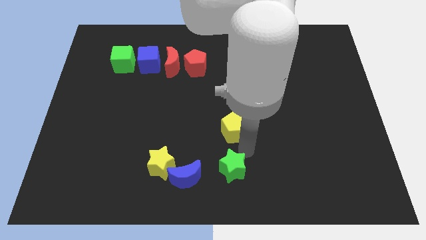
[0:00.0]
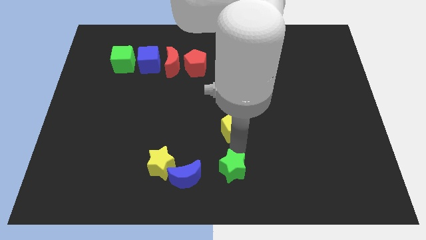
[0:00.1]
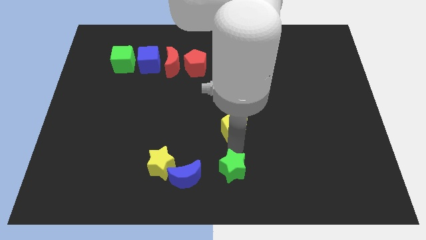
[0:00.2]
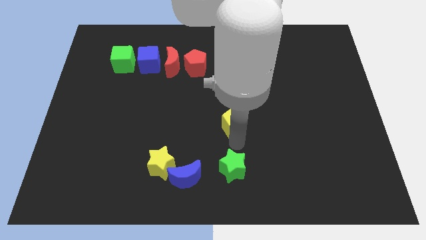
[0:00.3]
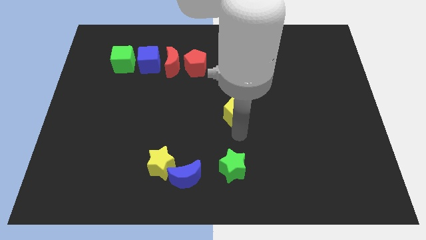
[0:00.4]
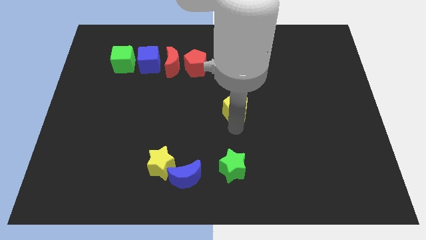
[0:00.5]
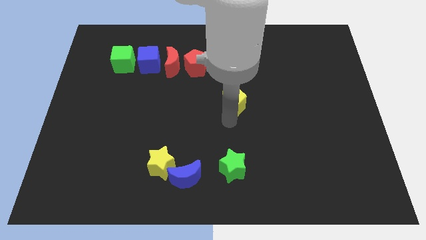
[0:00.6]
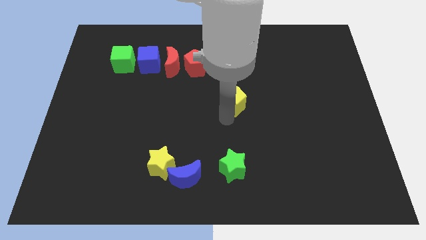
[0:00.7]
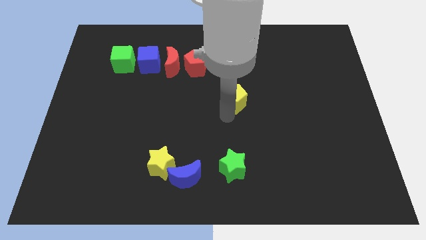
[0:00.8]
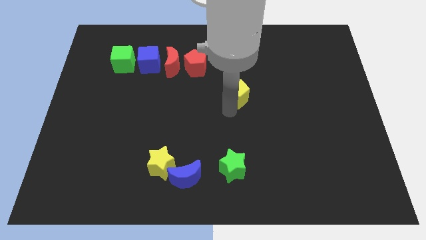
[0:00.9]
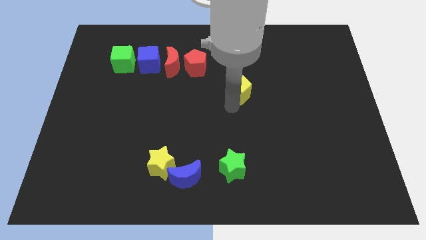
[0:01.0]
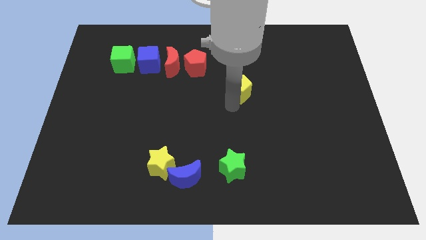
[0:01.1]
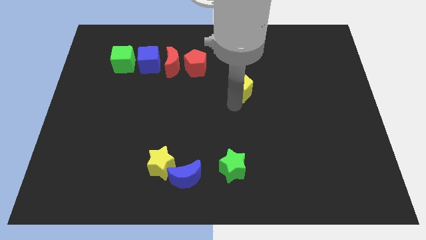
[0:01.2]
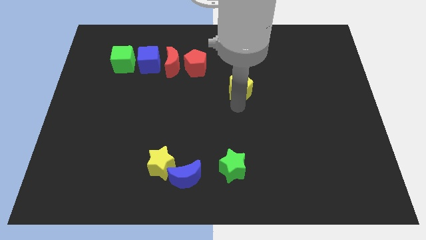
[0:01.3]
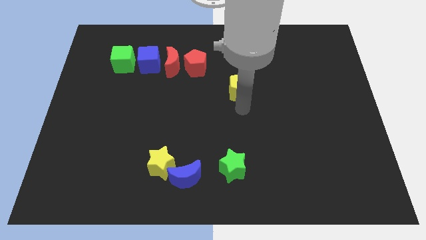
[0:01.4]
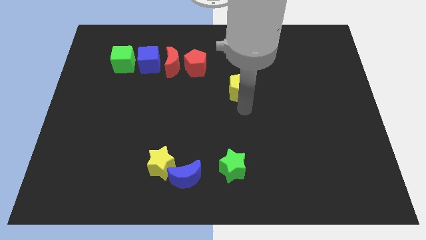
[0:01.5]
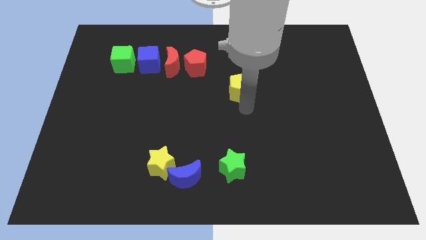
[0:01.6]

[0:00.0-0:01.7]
place yellow pentagon to the bottom right of red pentagon

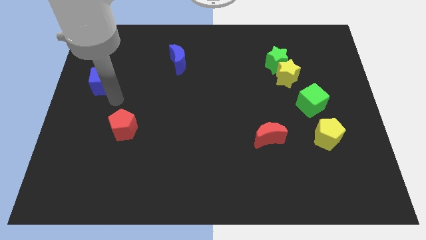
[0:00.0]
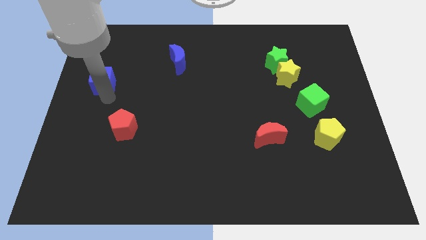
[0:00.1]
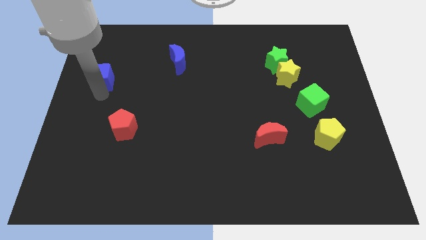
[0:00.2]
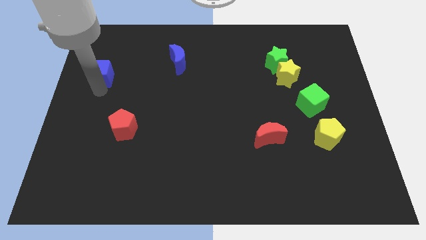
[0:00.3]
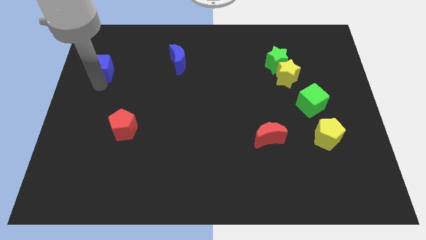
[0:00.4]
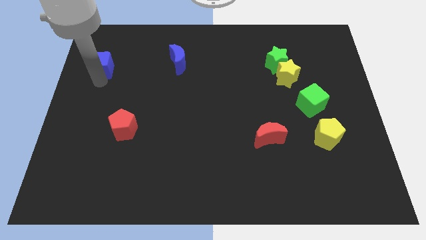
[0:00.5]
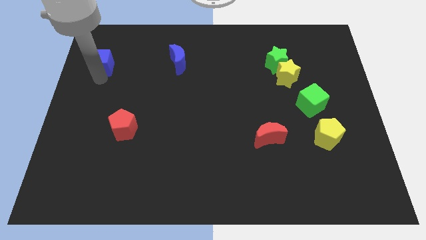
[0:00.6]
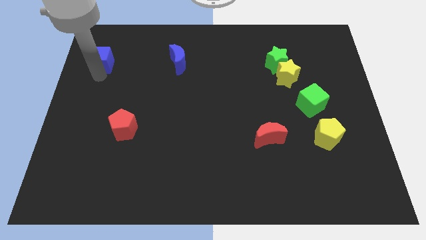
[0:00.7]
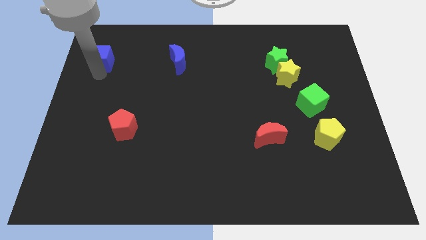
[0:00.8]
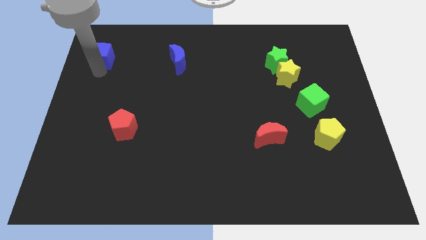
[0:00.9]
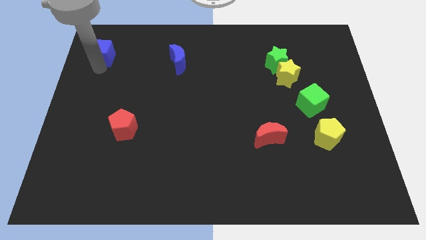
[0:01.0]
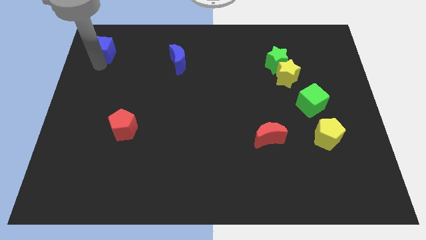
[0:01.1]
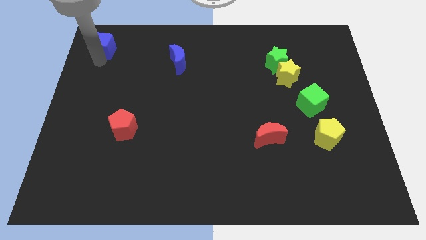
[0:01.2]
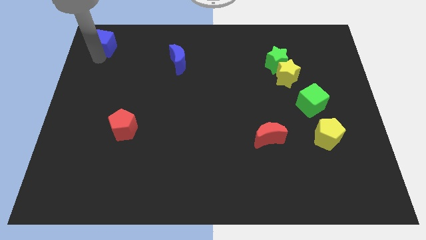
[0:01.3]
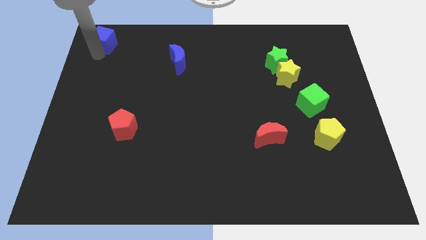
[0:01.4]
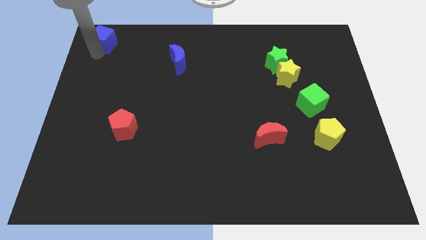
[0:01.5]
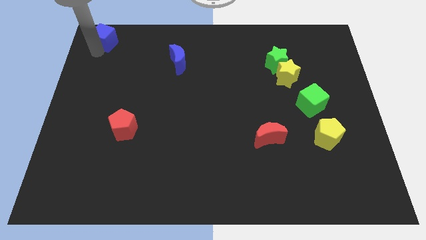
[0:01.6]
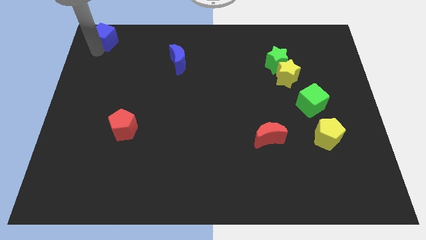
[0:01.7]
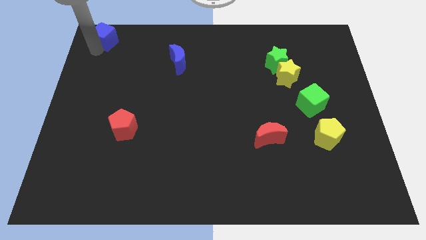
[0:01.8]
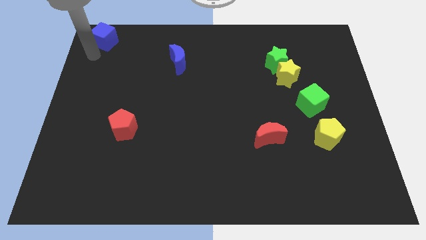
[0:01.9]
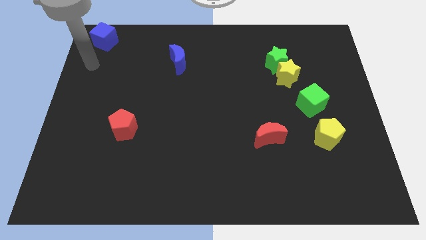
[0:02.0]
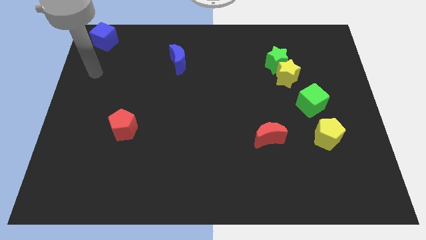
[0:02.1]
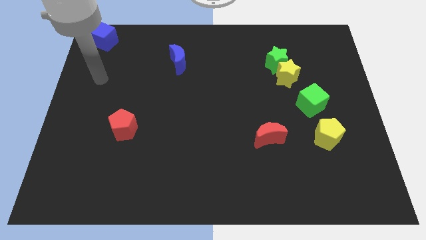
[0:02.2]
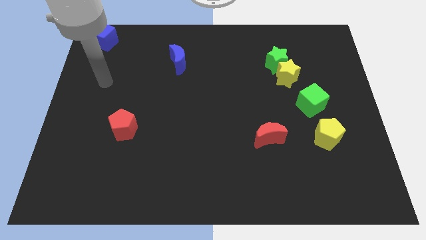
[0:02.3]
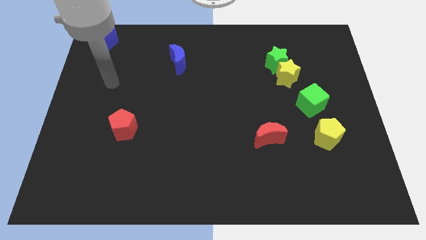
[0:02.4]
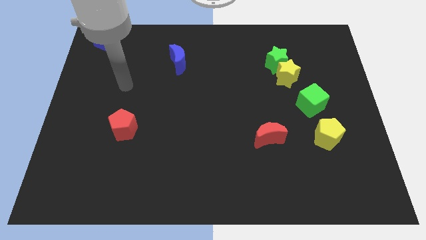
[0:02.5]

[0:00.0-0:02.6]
place blue cube to the top left

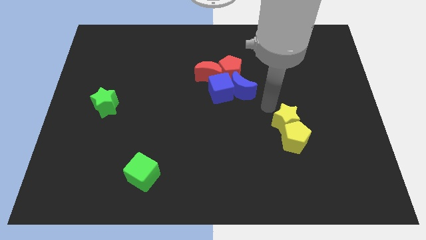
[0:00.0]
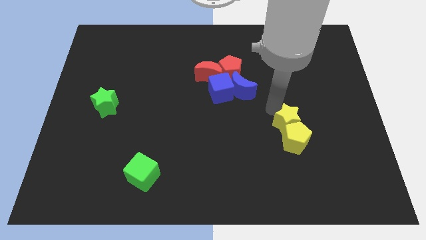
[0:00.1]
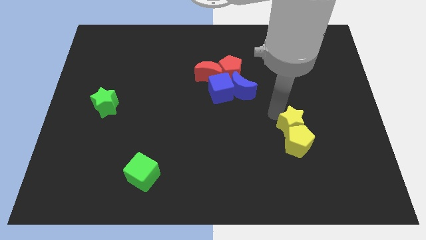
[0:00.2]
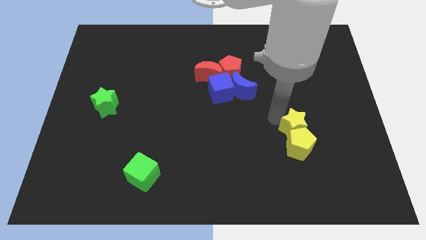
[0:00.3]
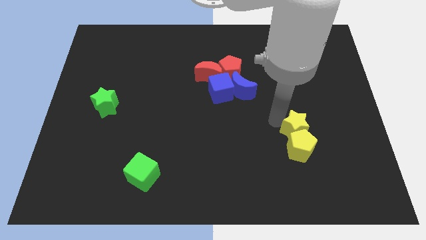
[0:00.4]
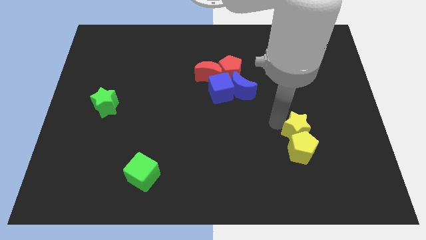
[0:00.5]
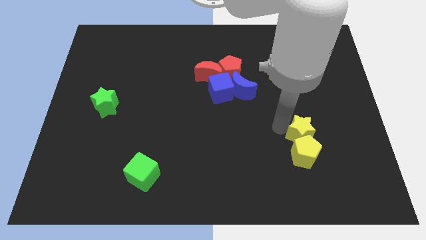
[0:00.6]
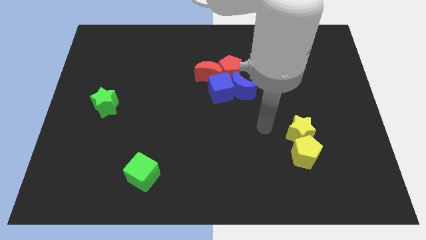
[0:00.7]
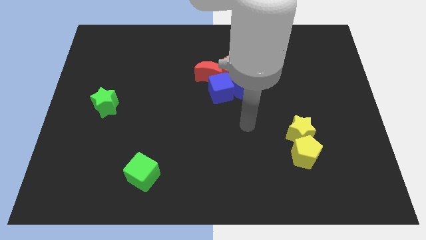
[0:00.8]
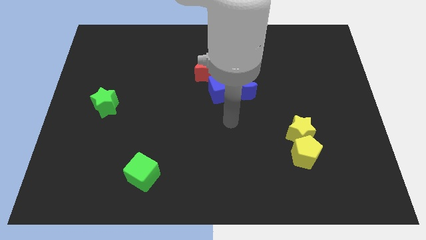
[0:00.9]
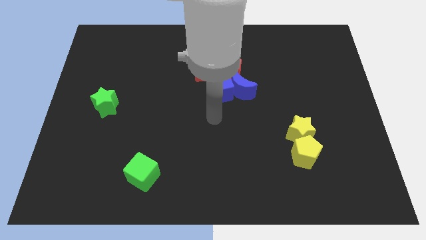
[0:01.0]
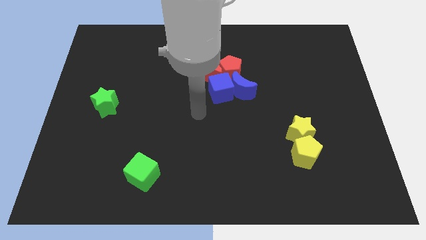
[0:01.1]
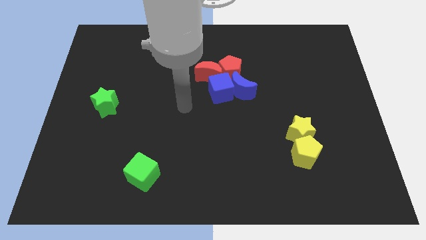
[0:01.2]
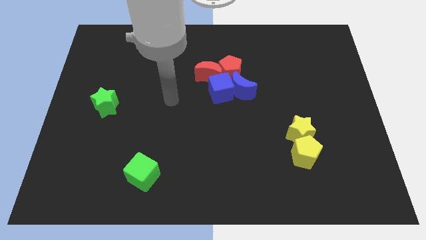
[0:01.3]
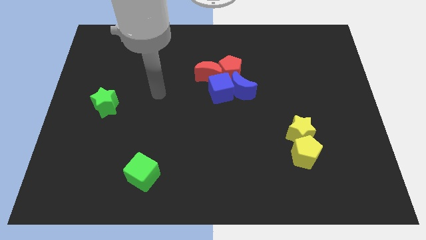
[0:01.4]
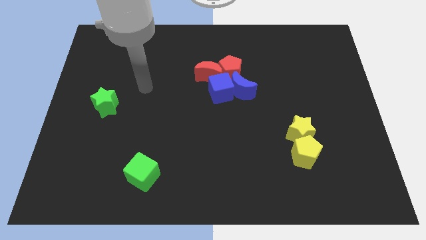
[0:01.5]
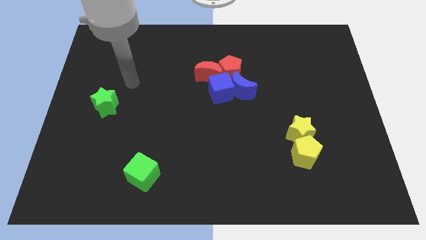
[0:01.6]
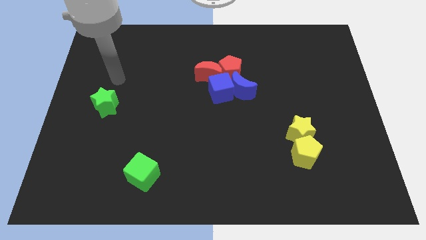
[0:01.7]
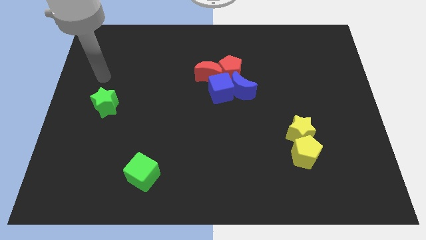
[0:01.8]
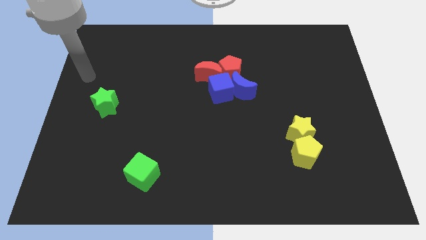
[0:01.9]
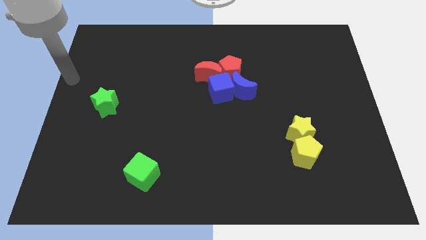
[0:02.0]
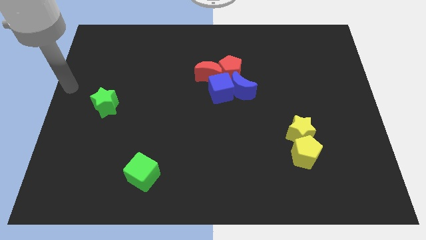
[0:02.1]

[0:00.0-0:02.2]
push the yellow blocks towards the bottom side

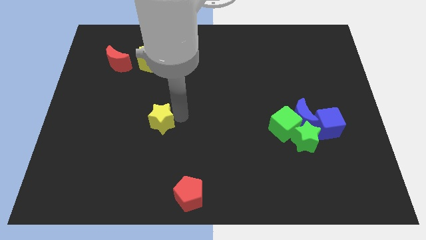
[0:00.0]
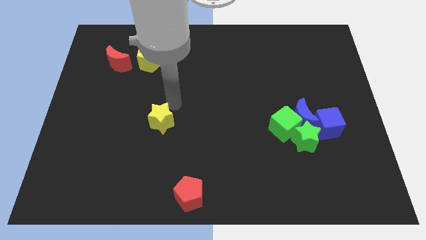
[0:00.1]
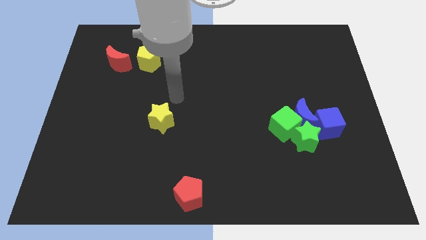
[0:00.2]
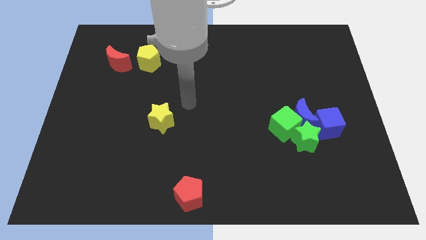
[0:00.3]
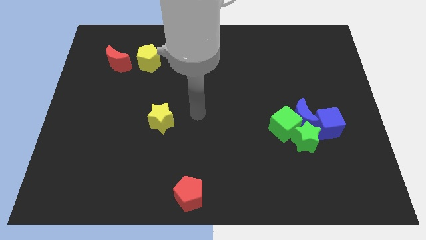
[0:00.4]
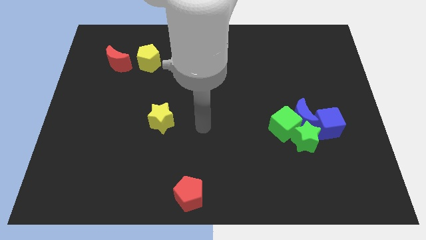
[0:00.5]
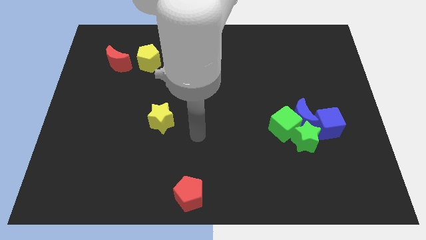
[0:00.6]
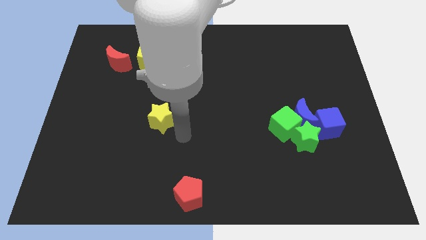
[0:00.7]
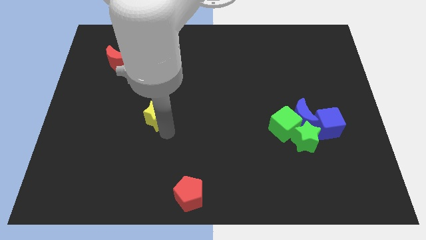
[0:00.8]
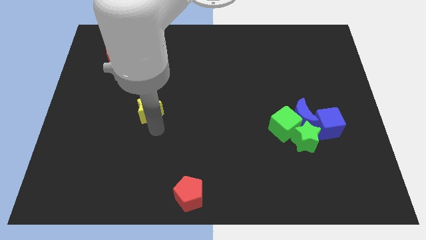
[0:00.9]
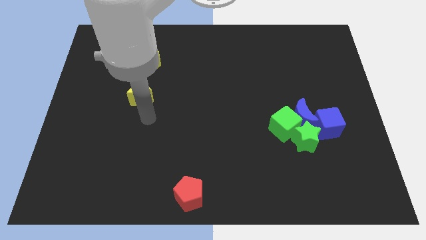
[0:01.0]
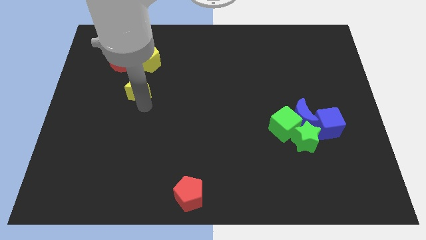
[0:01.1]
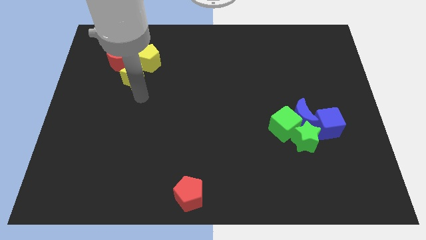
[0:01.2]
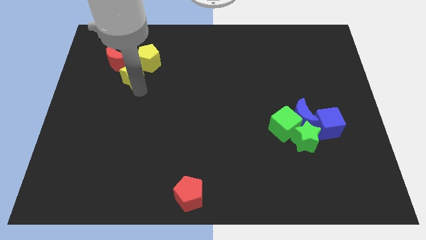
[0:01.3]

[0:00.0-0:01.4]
place yellow star below the red crescent

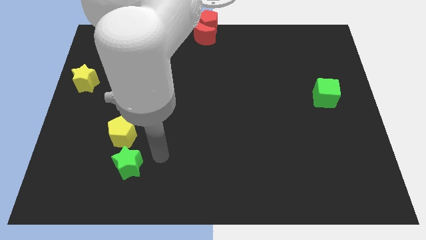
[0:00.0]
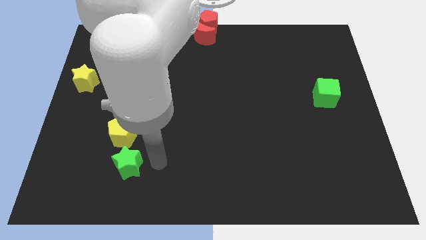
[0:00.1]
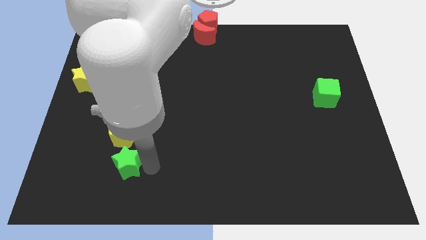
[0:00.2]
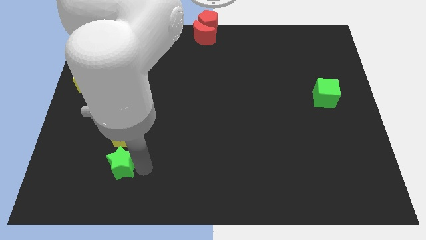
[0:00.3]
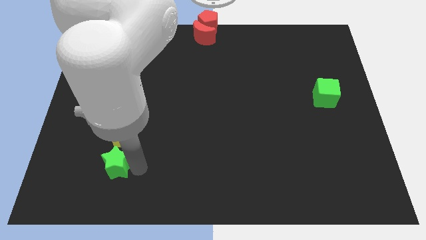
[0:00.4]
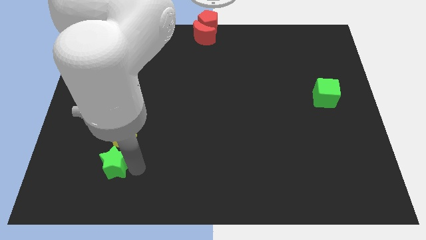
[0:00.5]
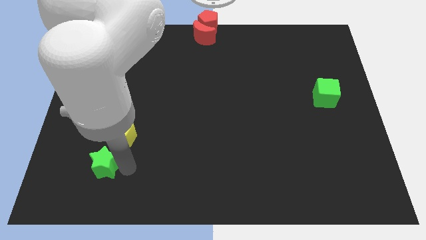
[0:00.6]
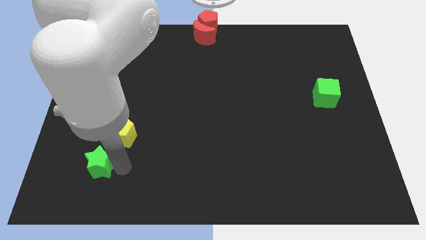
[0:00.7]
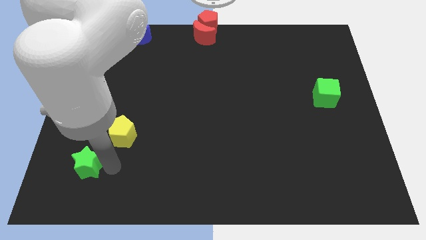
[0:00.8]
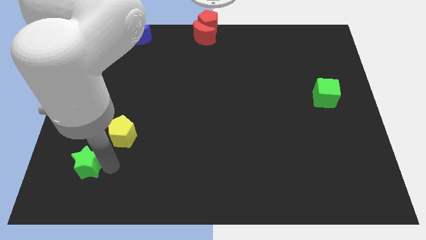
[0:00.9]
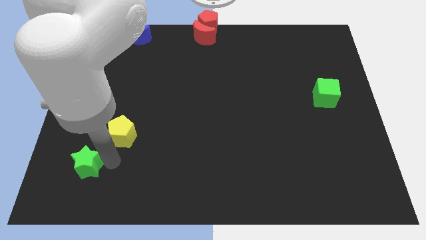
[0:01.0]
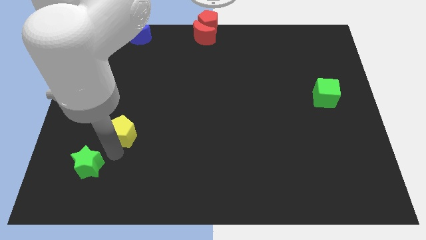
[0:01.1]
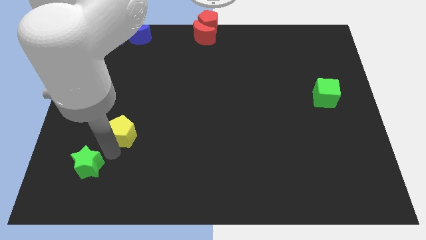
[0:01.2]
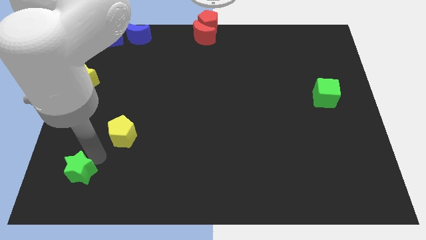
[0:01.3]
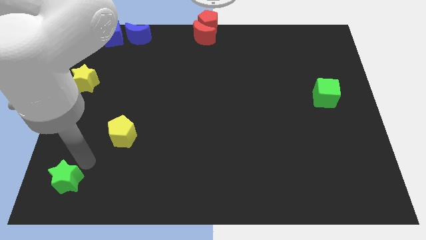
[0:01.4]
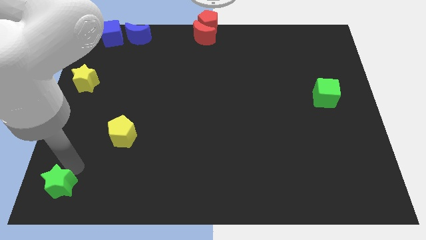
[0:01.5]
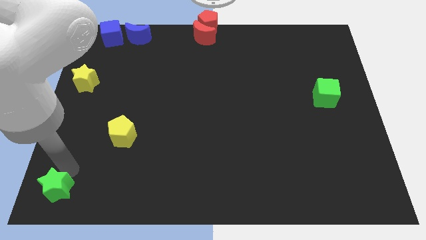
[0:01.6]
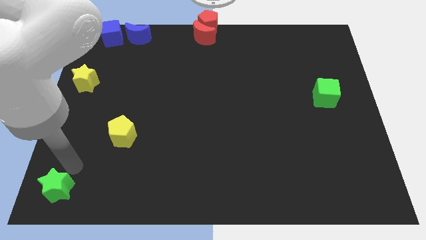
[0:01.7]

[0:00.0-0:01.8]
place green star at the bottom left corner of the board
